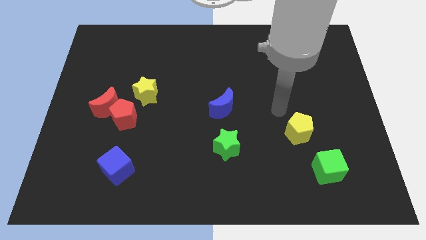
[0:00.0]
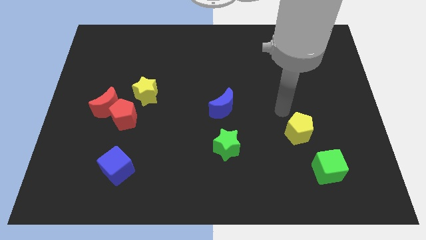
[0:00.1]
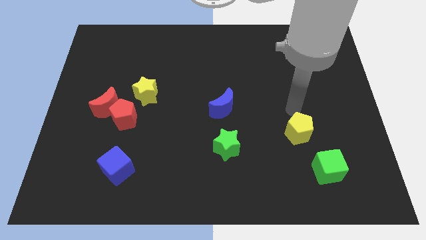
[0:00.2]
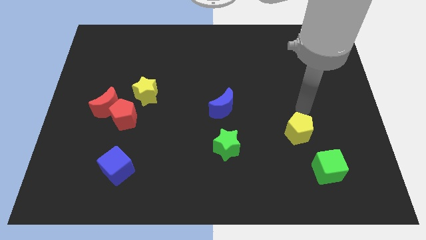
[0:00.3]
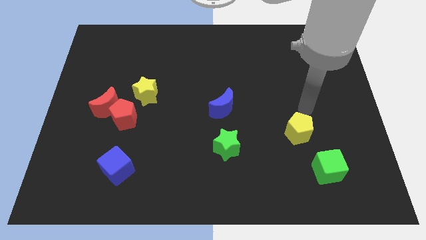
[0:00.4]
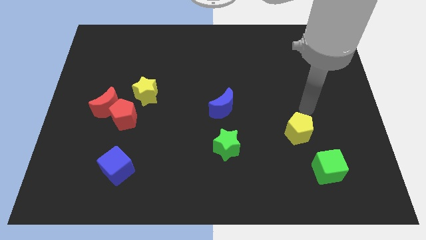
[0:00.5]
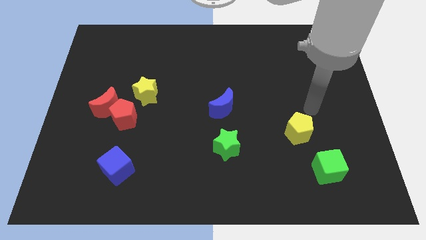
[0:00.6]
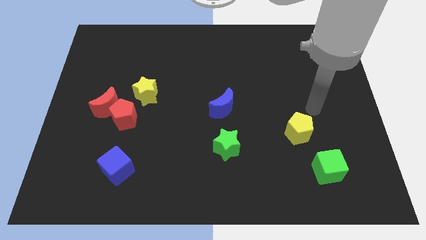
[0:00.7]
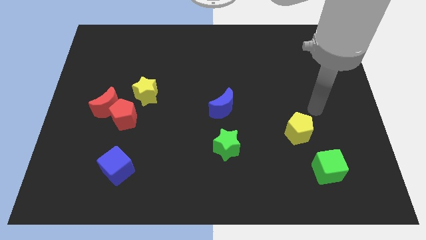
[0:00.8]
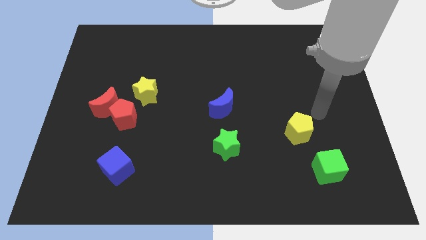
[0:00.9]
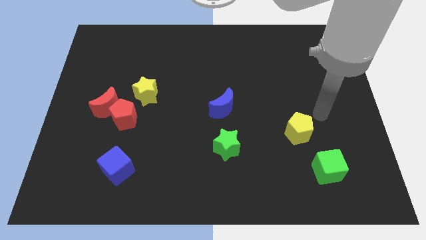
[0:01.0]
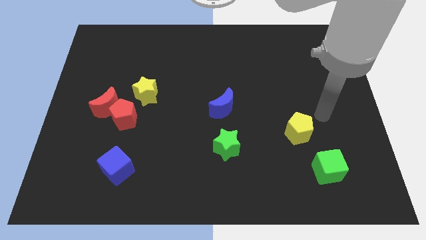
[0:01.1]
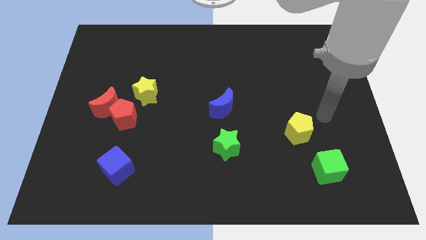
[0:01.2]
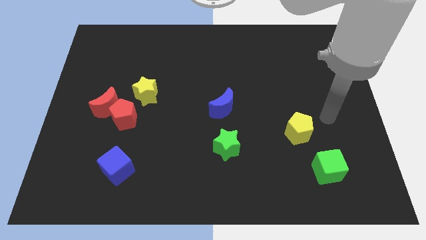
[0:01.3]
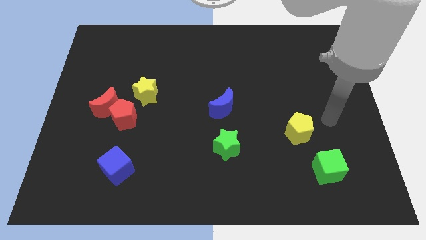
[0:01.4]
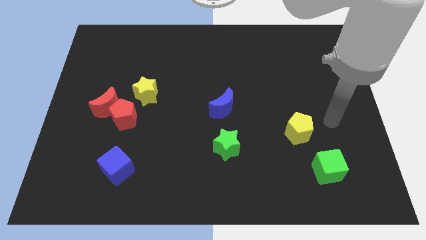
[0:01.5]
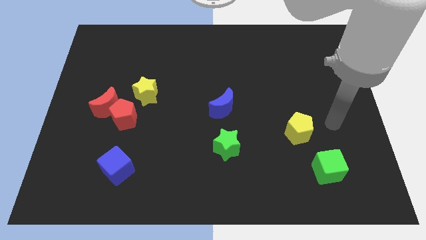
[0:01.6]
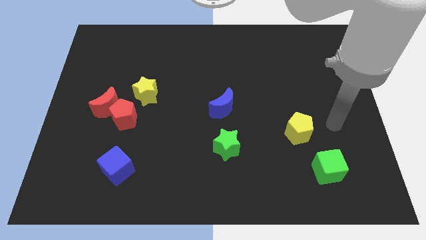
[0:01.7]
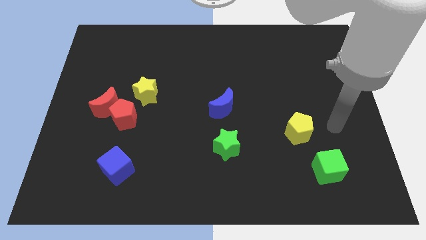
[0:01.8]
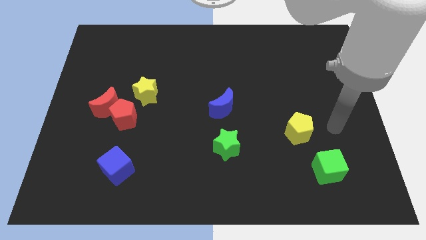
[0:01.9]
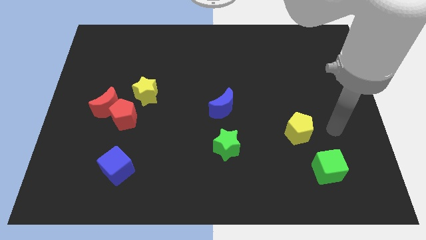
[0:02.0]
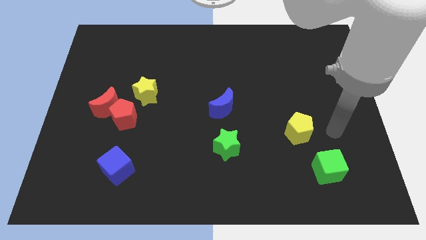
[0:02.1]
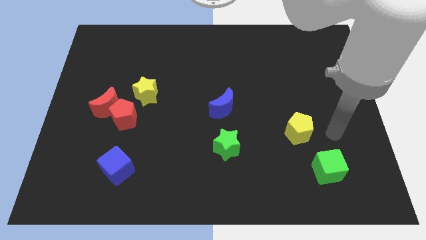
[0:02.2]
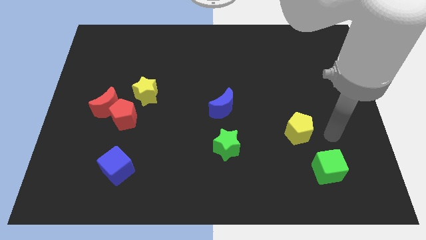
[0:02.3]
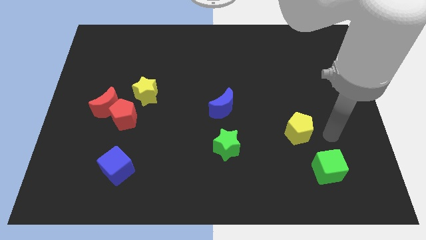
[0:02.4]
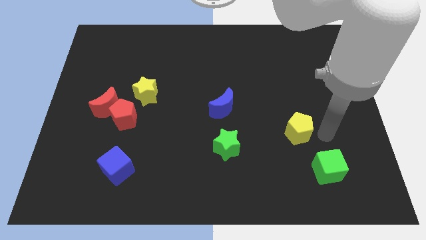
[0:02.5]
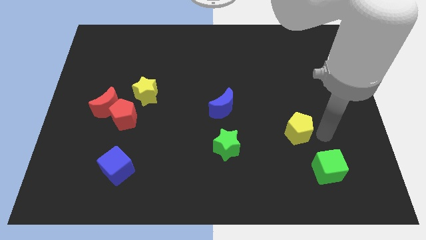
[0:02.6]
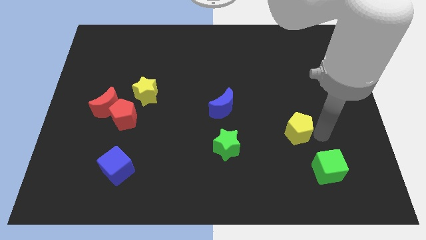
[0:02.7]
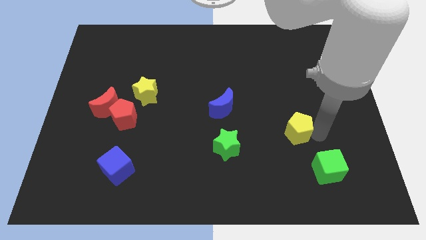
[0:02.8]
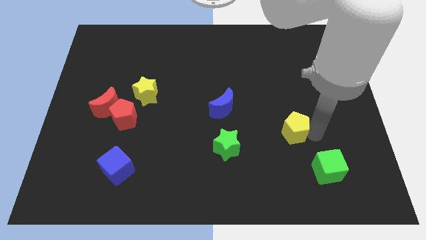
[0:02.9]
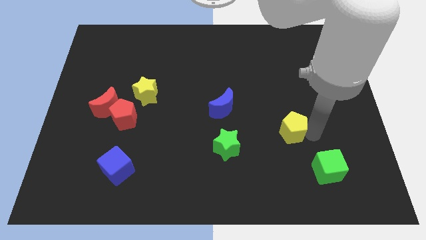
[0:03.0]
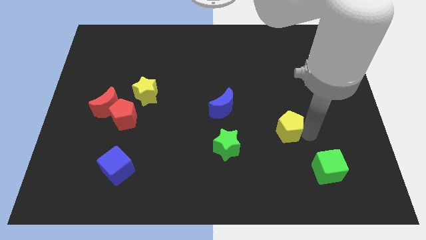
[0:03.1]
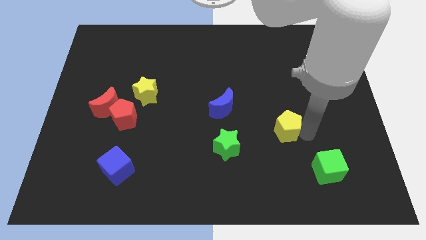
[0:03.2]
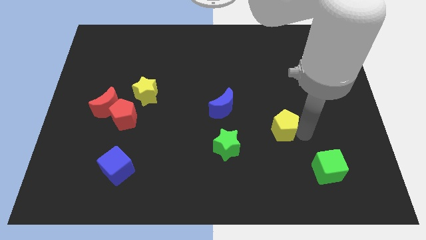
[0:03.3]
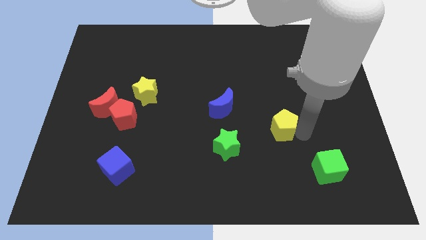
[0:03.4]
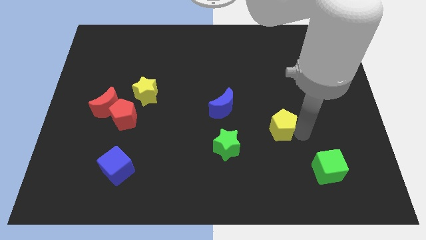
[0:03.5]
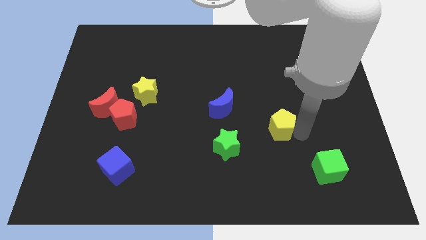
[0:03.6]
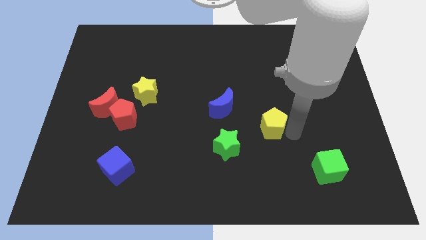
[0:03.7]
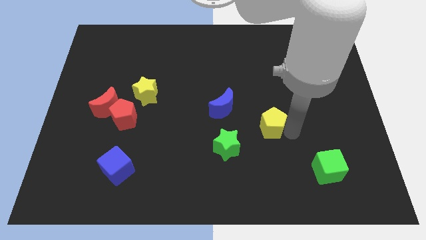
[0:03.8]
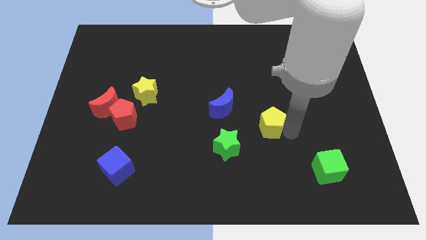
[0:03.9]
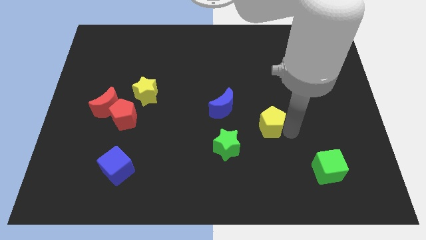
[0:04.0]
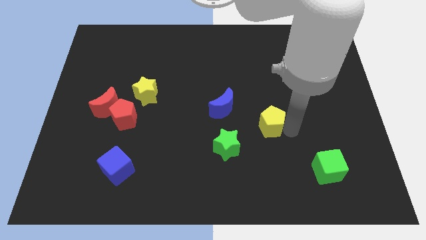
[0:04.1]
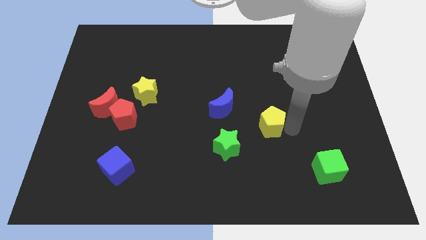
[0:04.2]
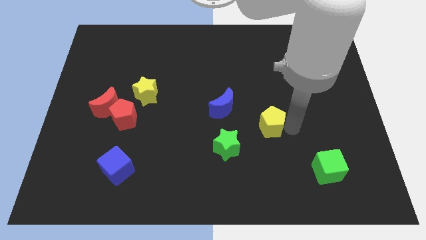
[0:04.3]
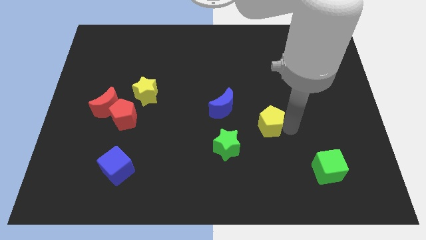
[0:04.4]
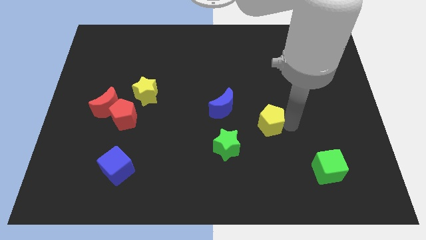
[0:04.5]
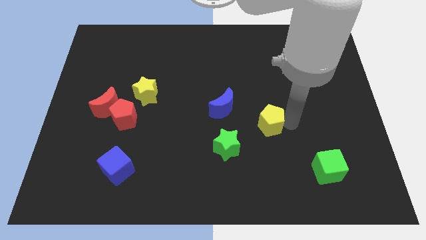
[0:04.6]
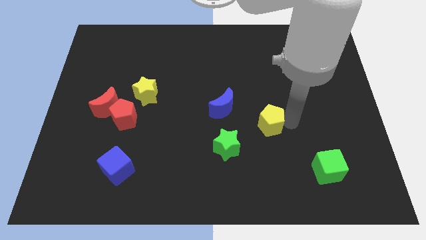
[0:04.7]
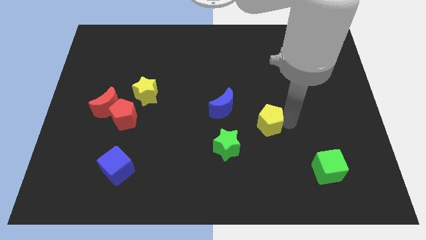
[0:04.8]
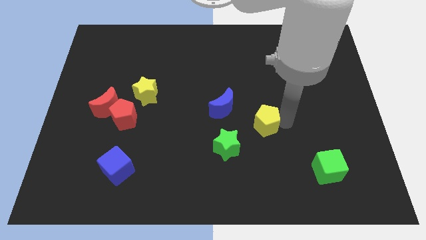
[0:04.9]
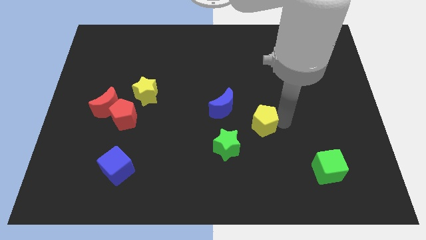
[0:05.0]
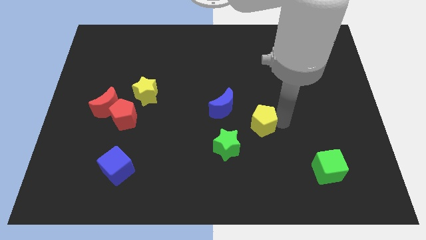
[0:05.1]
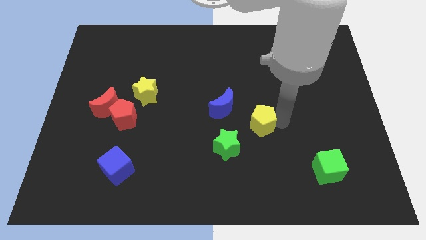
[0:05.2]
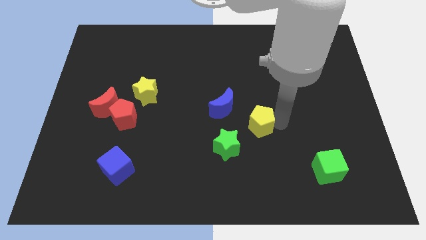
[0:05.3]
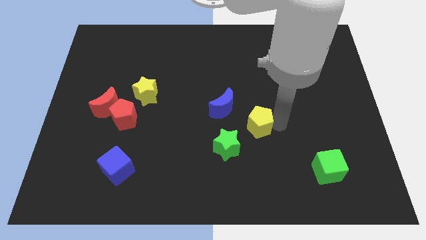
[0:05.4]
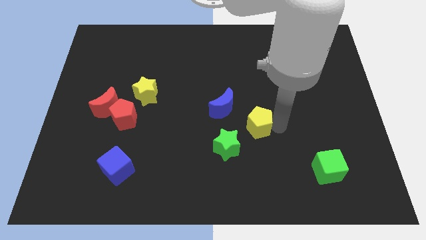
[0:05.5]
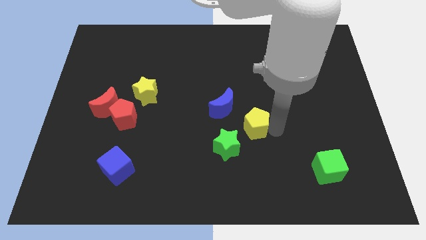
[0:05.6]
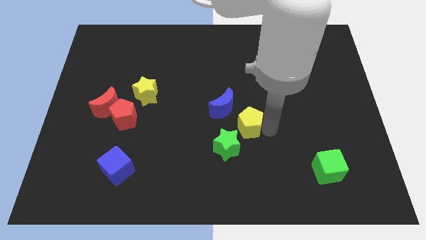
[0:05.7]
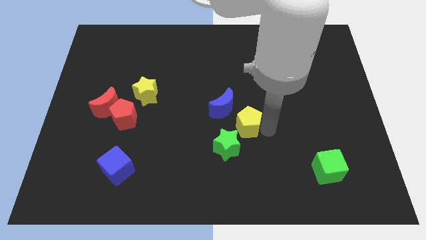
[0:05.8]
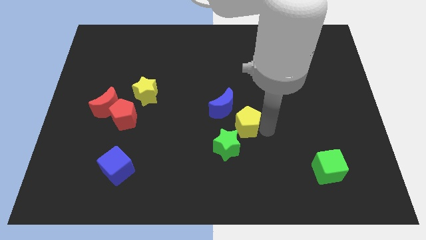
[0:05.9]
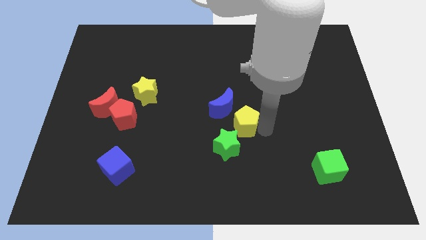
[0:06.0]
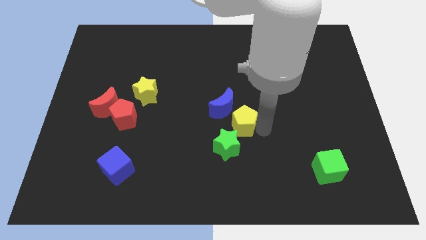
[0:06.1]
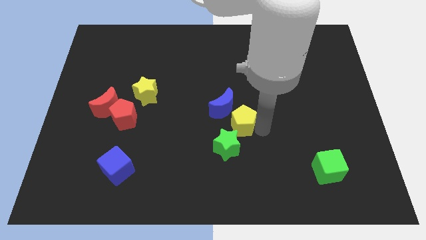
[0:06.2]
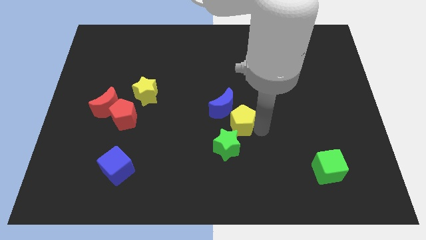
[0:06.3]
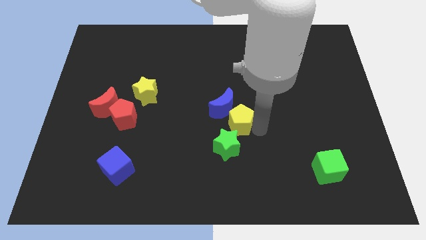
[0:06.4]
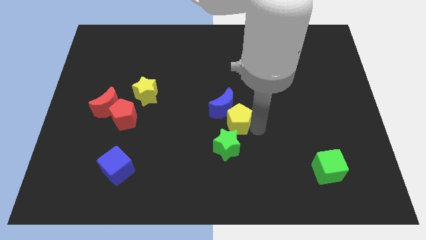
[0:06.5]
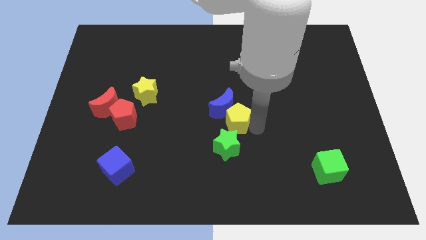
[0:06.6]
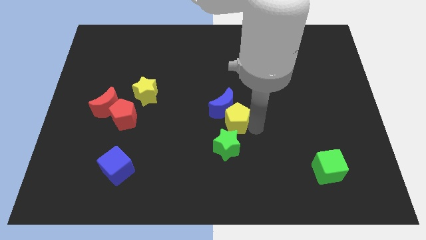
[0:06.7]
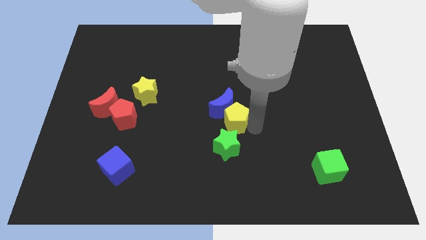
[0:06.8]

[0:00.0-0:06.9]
push the yellow pentagon to the right of the blue crescent

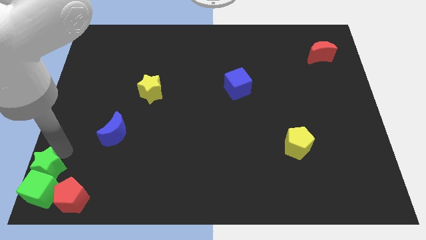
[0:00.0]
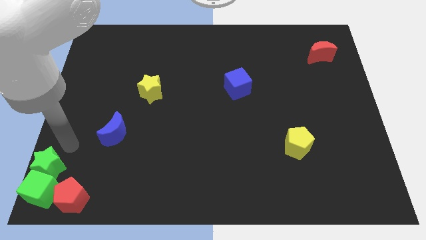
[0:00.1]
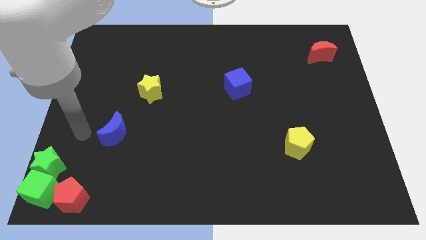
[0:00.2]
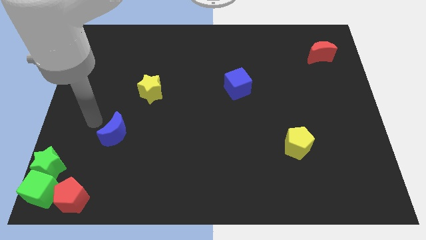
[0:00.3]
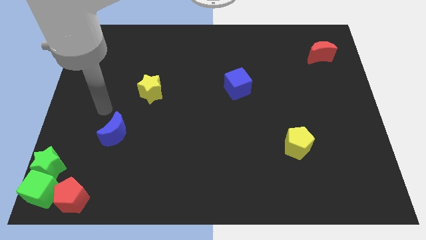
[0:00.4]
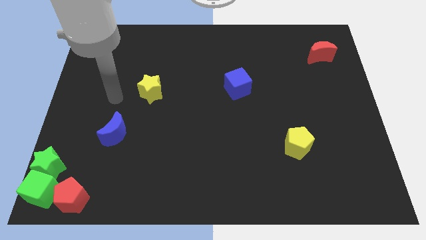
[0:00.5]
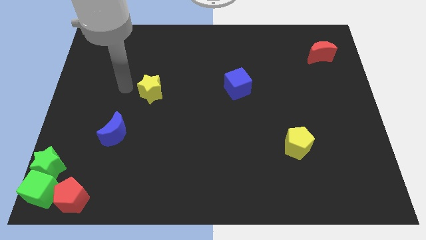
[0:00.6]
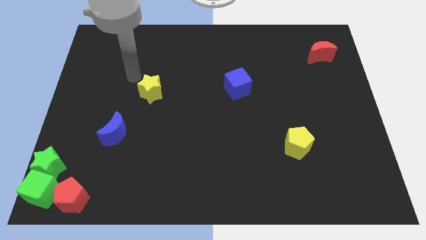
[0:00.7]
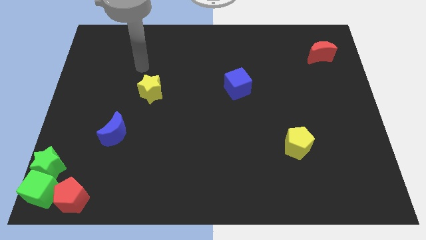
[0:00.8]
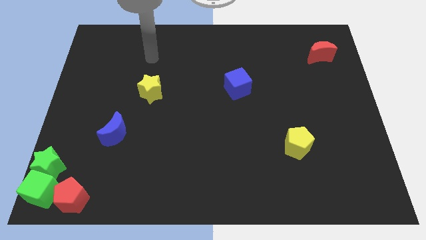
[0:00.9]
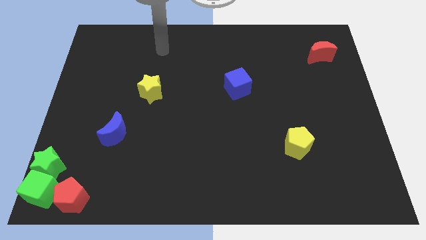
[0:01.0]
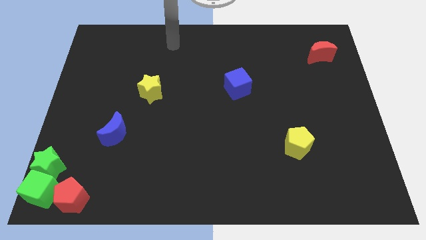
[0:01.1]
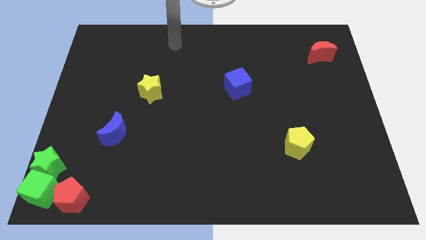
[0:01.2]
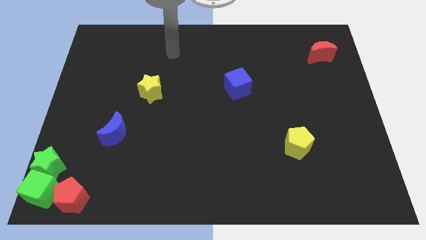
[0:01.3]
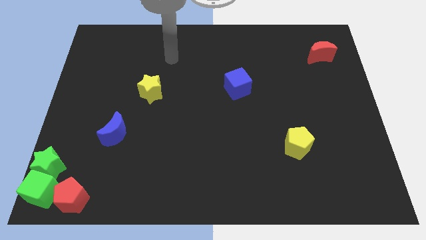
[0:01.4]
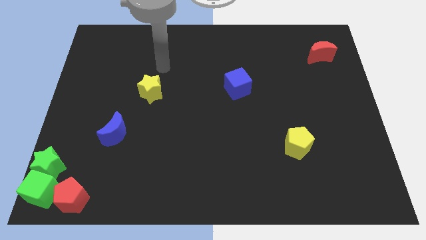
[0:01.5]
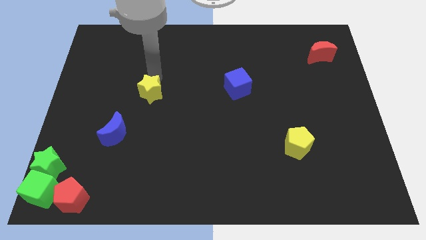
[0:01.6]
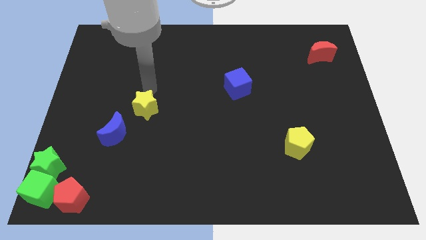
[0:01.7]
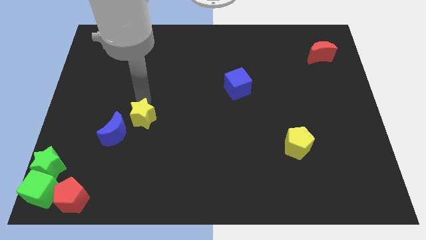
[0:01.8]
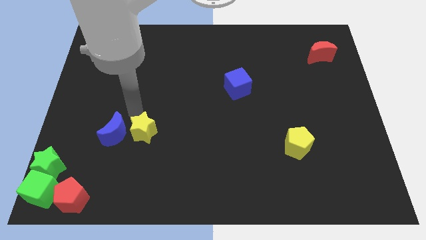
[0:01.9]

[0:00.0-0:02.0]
move the yellow star parallel right to the blue moon
